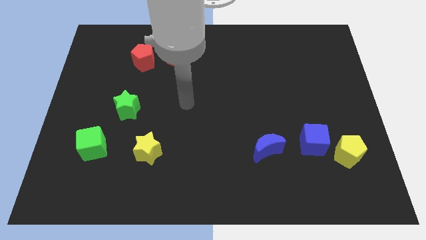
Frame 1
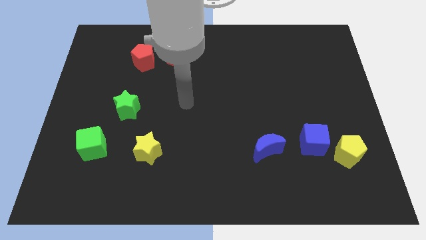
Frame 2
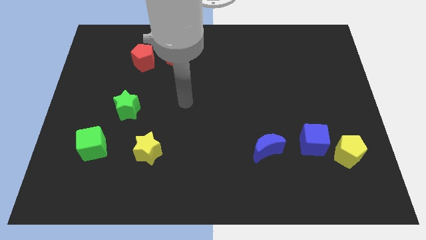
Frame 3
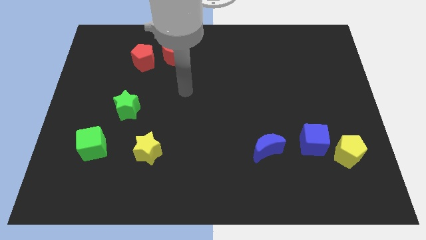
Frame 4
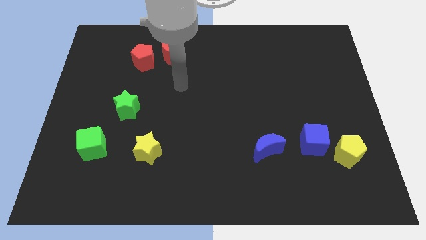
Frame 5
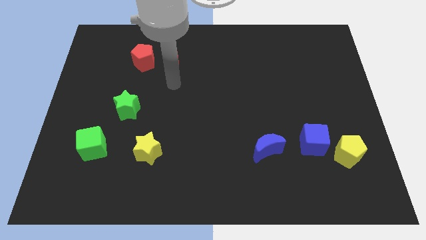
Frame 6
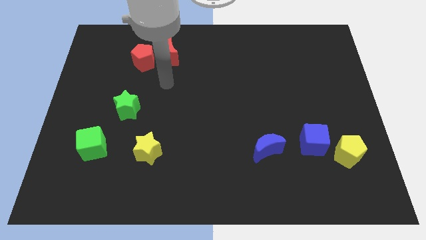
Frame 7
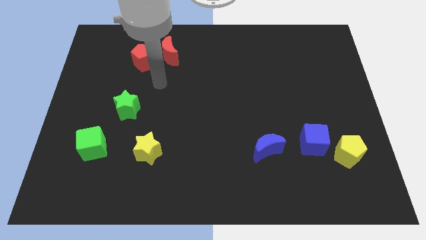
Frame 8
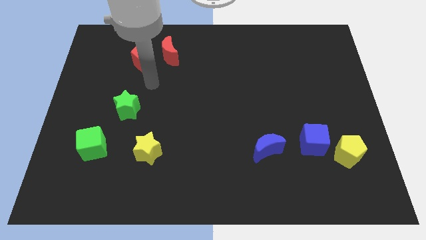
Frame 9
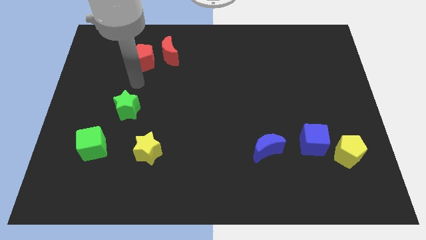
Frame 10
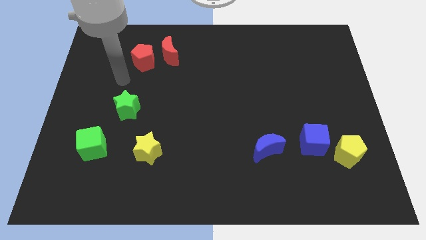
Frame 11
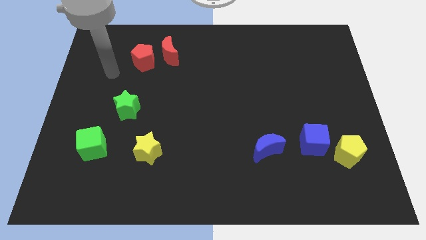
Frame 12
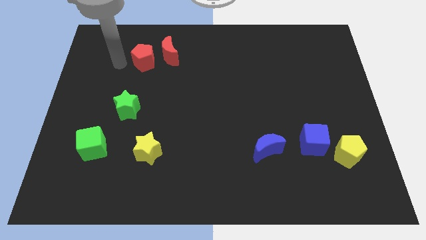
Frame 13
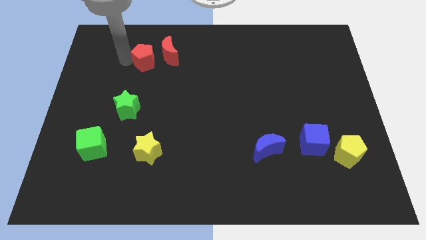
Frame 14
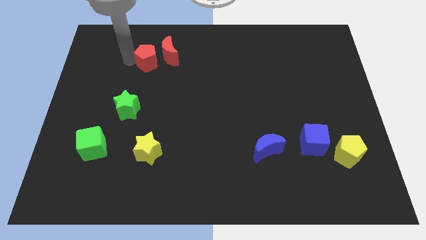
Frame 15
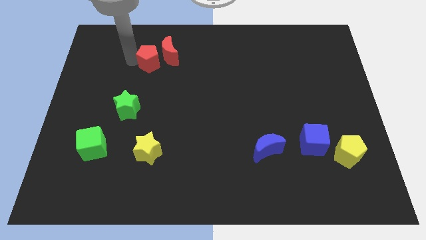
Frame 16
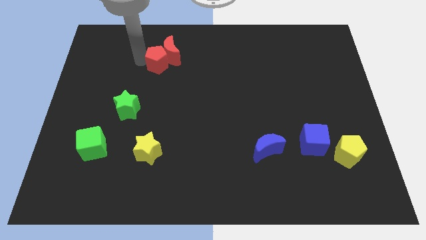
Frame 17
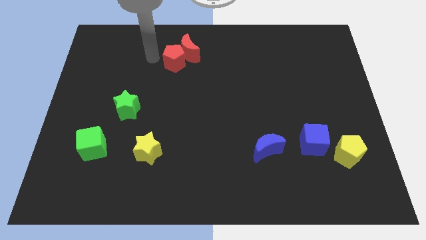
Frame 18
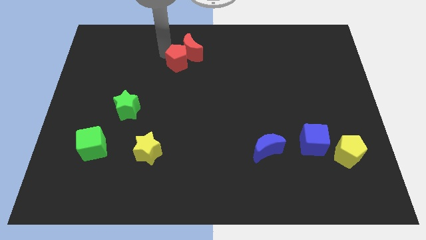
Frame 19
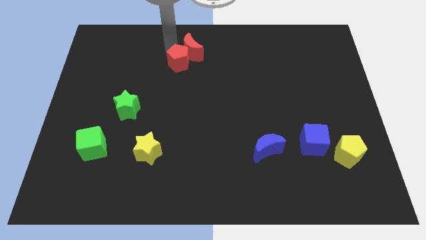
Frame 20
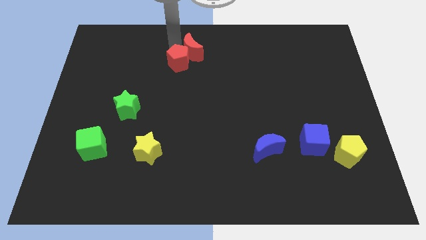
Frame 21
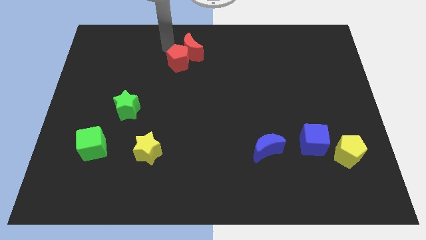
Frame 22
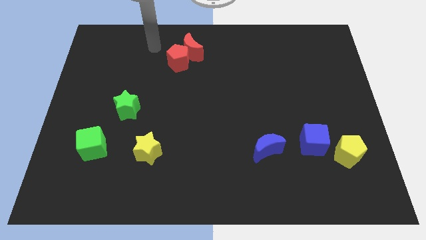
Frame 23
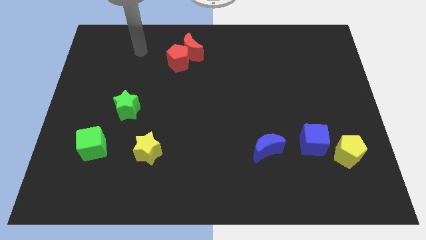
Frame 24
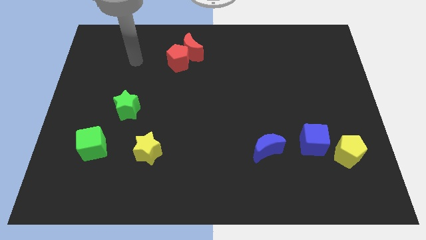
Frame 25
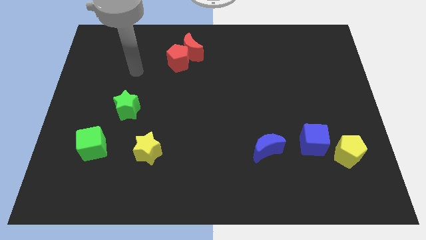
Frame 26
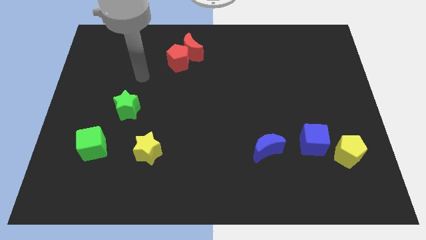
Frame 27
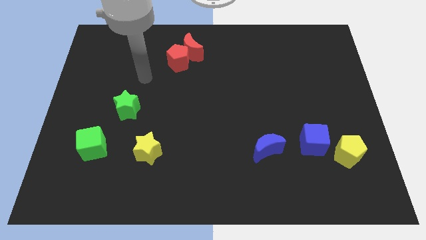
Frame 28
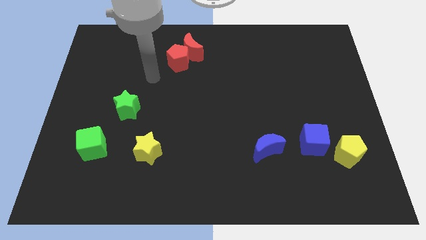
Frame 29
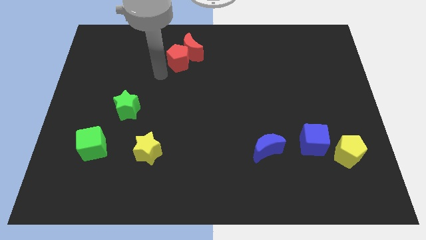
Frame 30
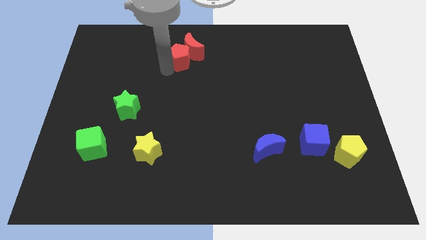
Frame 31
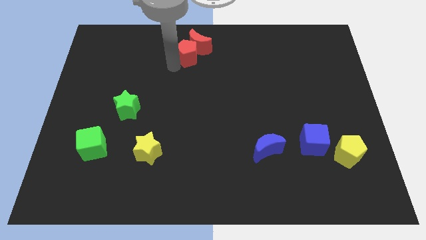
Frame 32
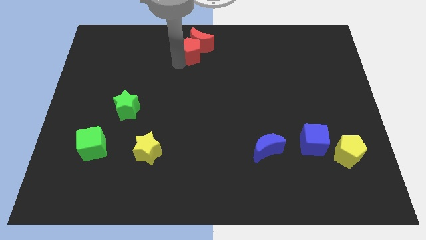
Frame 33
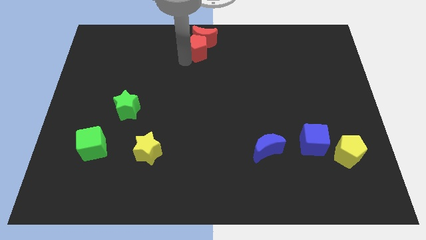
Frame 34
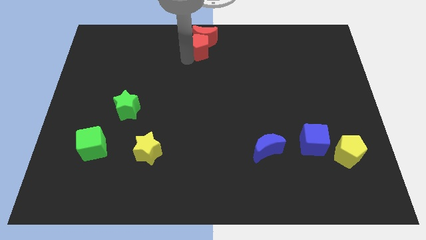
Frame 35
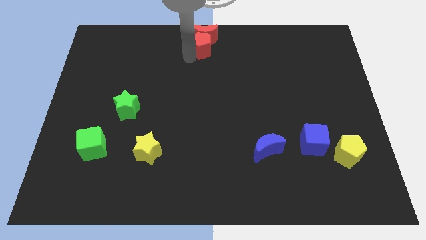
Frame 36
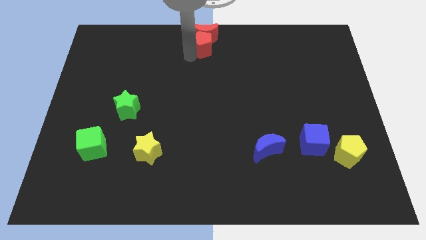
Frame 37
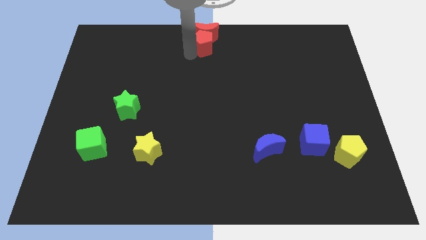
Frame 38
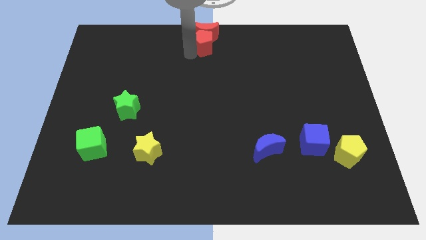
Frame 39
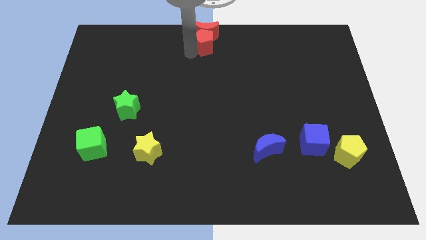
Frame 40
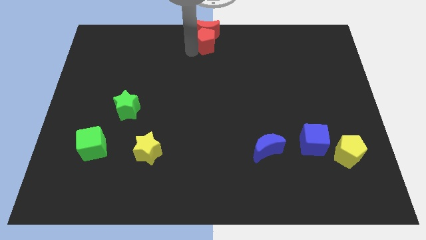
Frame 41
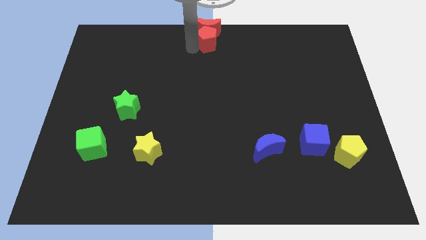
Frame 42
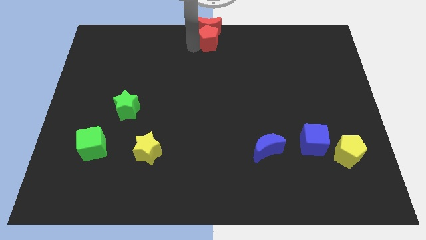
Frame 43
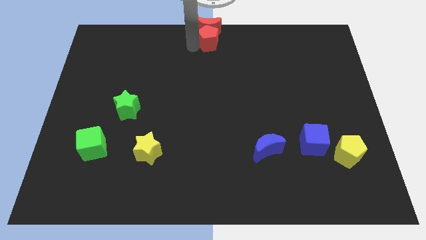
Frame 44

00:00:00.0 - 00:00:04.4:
move the red blocks to the top center of the table

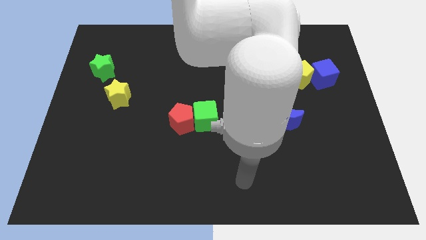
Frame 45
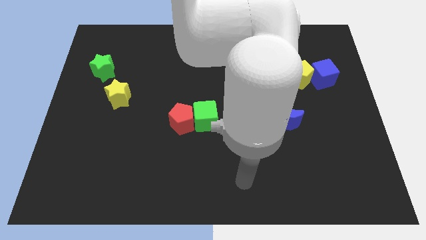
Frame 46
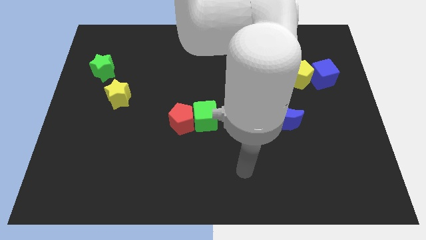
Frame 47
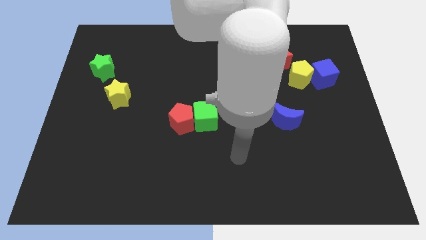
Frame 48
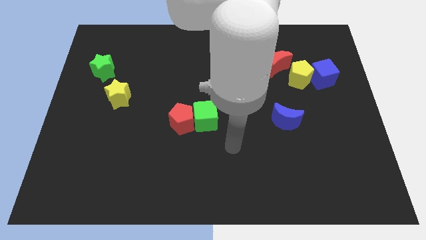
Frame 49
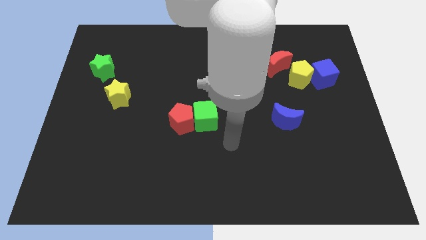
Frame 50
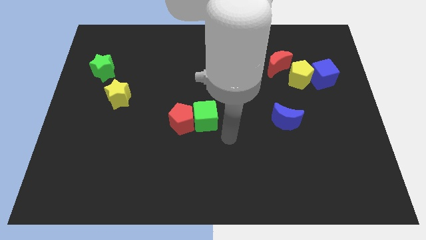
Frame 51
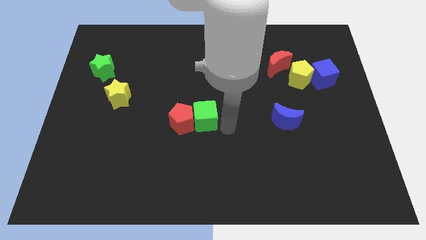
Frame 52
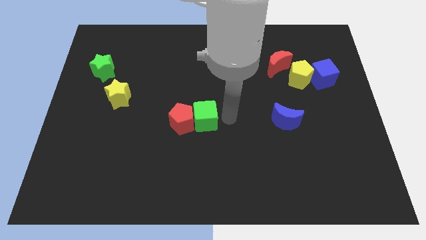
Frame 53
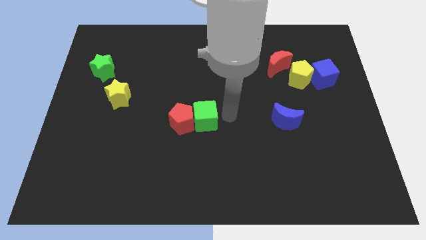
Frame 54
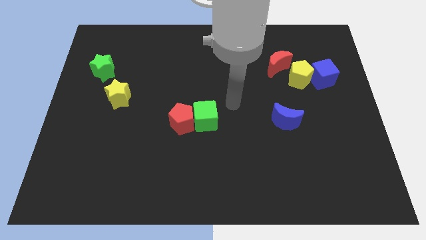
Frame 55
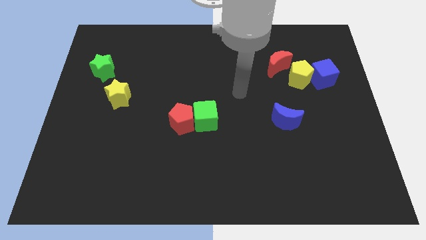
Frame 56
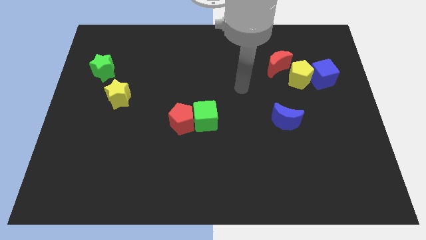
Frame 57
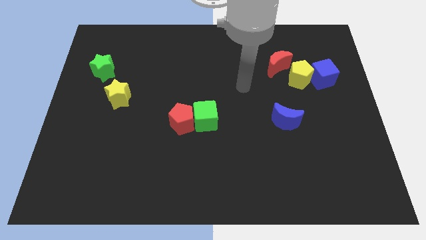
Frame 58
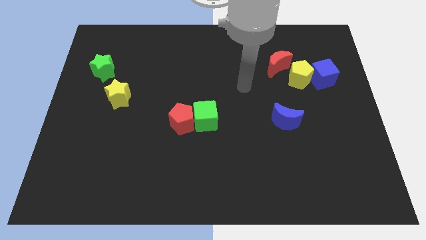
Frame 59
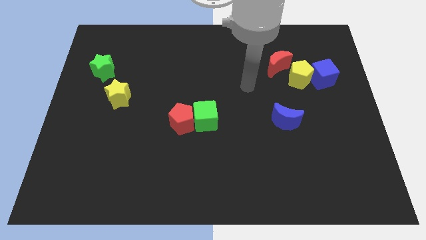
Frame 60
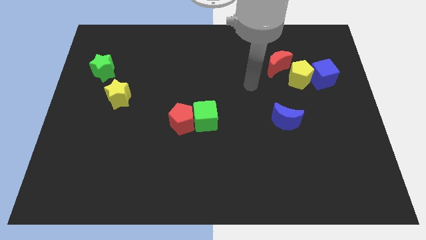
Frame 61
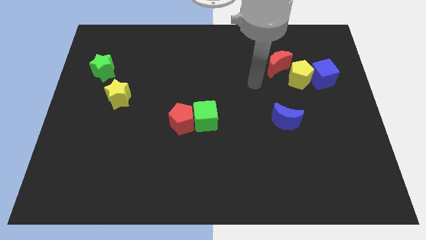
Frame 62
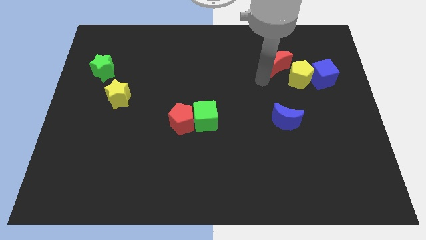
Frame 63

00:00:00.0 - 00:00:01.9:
move your arm towards the red crescent

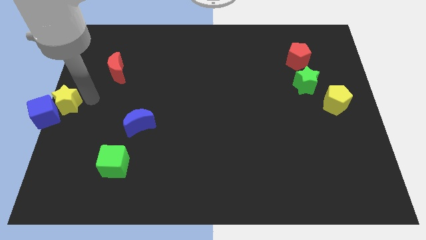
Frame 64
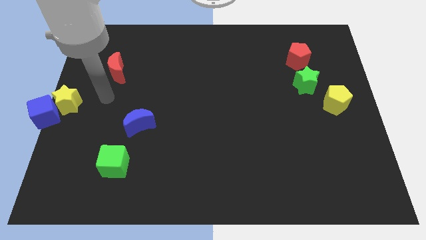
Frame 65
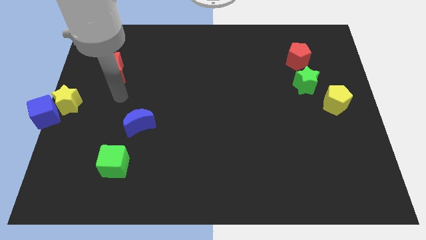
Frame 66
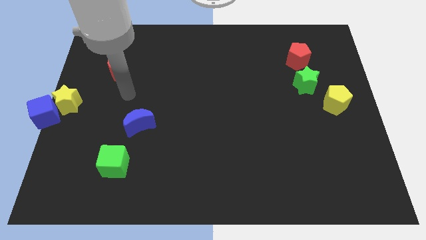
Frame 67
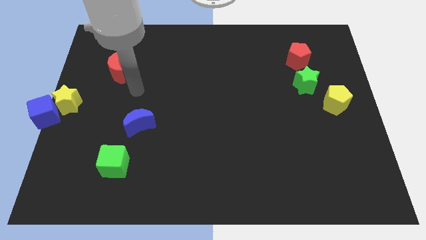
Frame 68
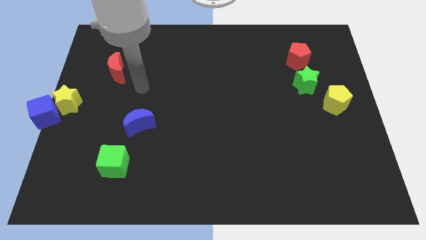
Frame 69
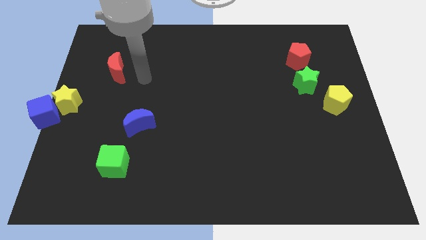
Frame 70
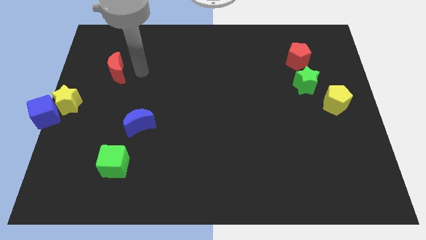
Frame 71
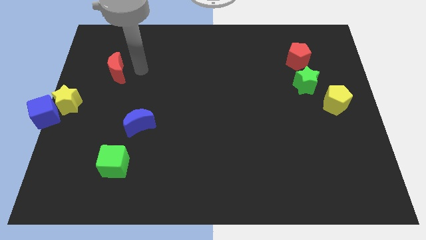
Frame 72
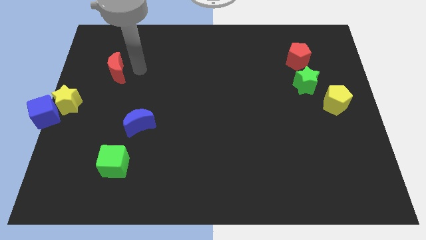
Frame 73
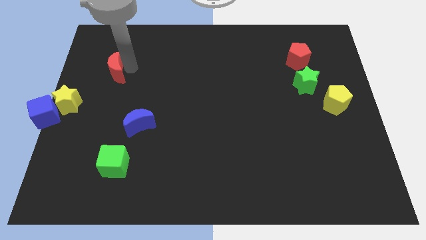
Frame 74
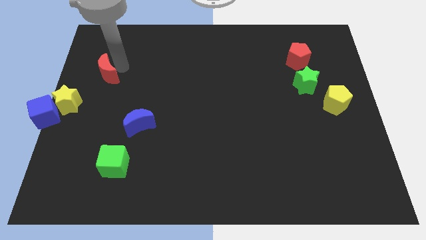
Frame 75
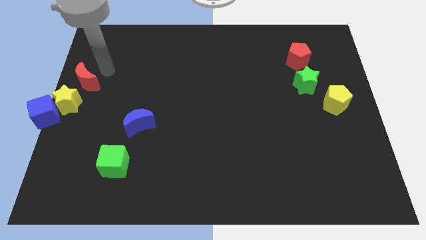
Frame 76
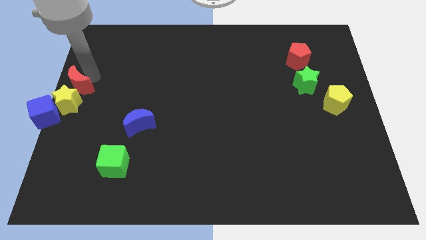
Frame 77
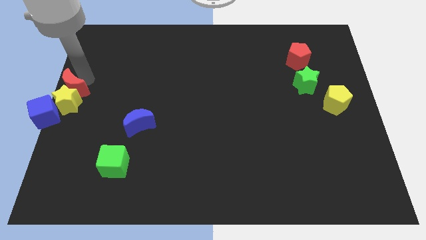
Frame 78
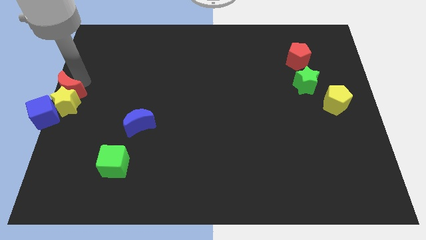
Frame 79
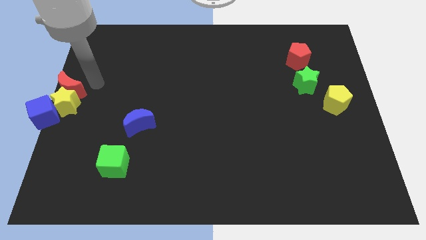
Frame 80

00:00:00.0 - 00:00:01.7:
slide the red moon into the yellow star

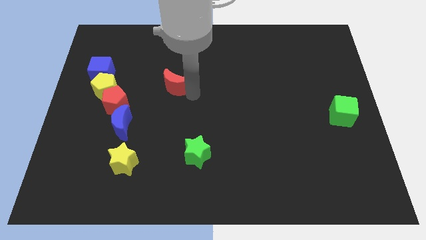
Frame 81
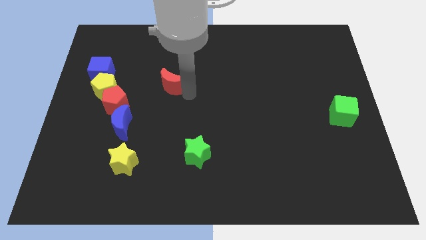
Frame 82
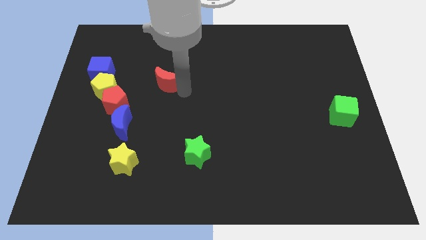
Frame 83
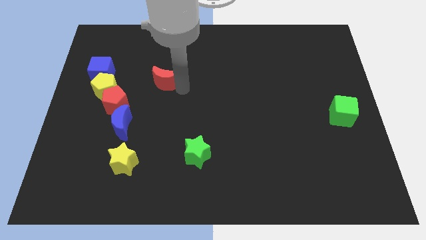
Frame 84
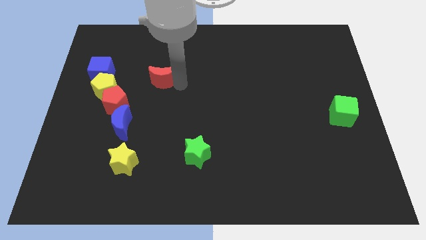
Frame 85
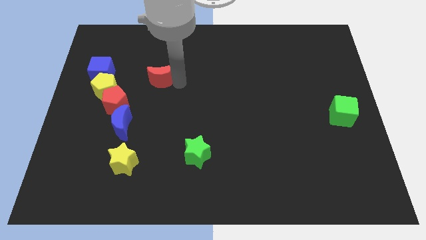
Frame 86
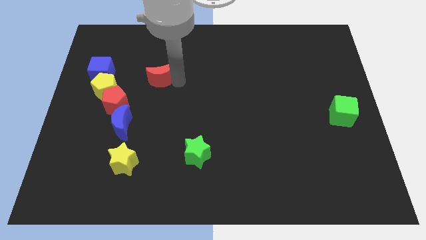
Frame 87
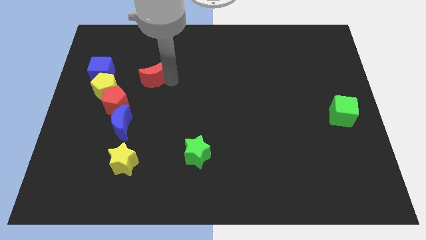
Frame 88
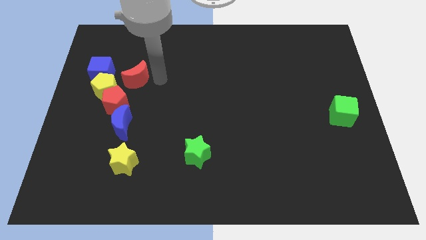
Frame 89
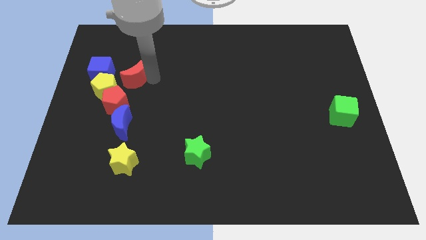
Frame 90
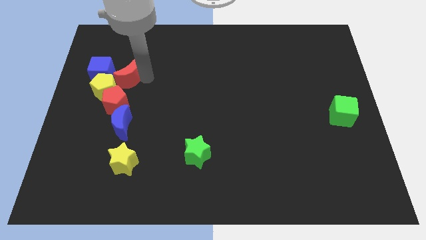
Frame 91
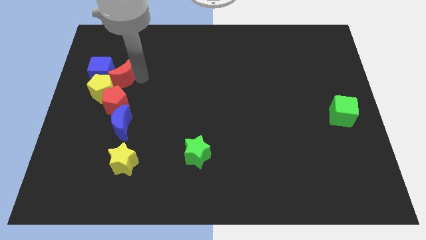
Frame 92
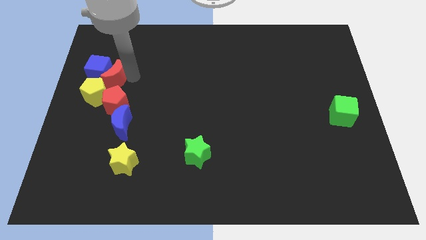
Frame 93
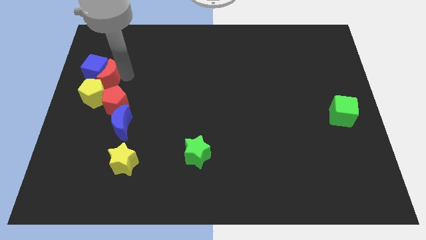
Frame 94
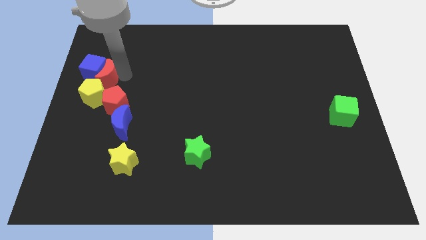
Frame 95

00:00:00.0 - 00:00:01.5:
push the red moon into the blue cube to the right
